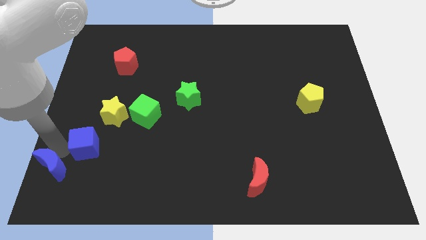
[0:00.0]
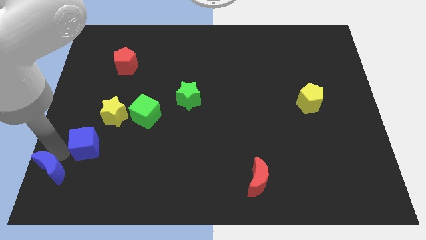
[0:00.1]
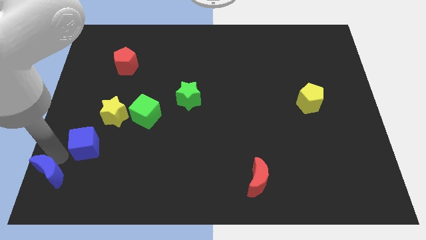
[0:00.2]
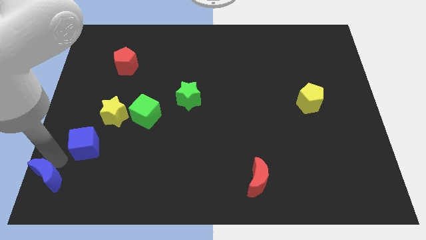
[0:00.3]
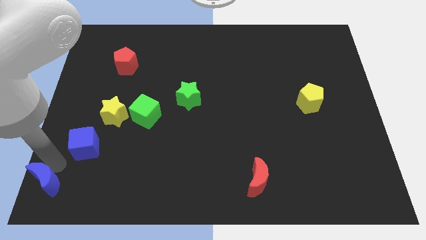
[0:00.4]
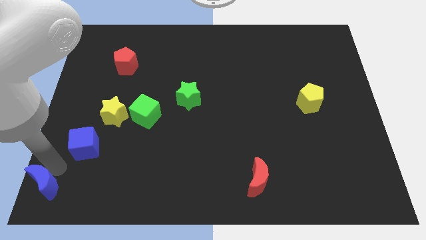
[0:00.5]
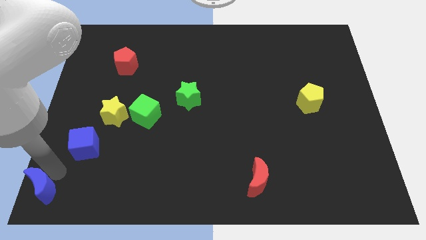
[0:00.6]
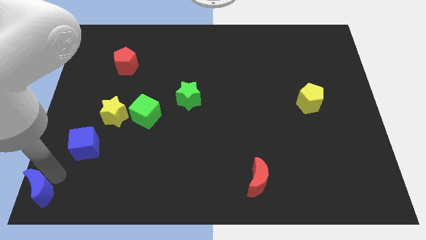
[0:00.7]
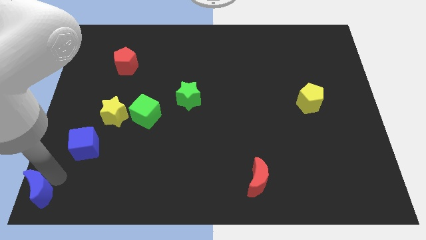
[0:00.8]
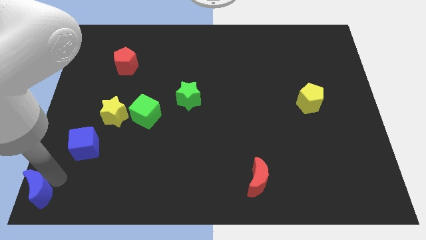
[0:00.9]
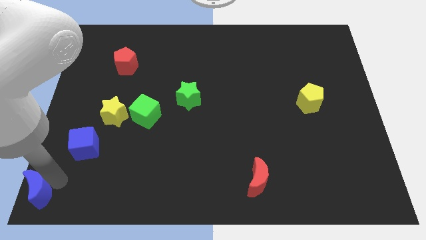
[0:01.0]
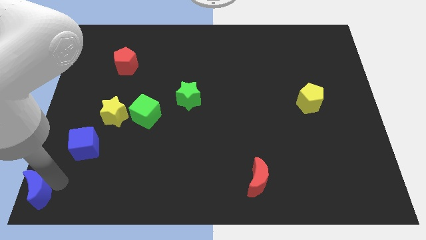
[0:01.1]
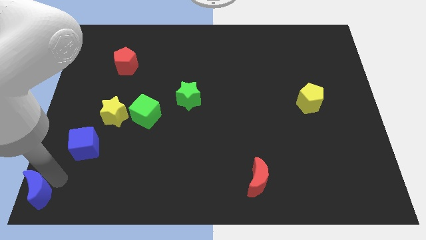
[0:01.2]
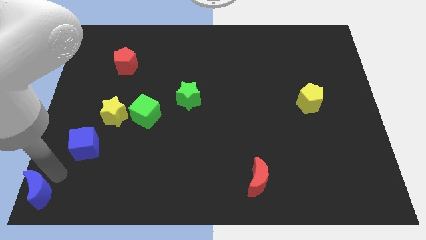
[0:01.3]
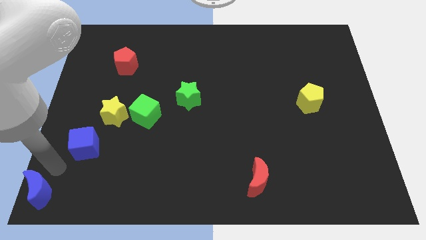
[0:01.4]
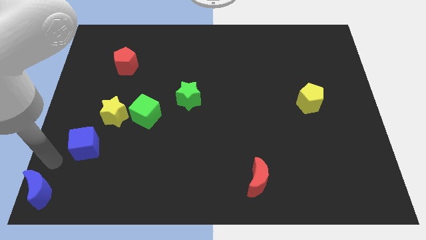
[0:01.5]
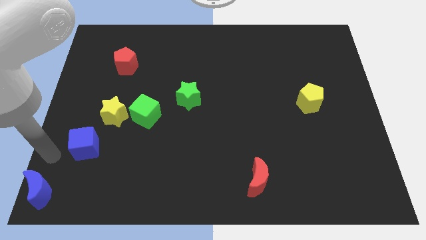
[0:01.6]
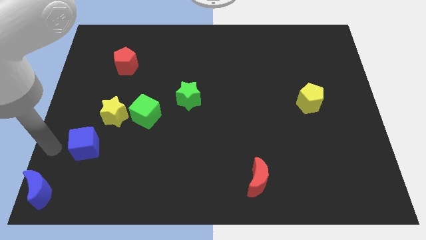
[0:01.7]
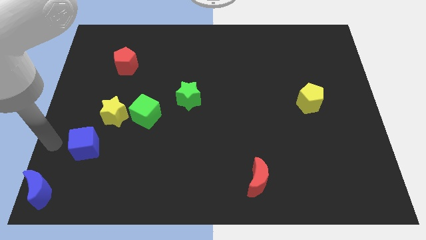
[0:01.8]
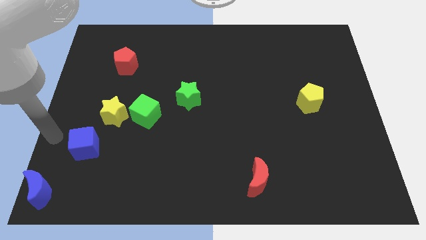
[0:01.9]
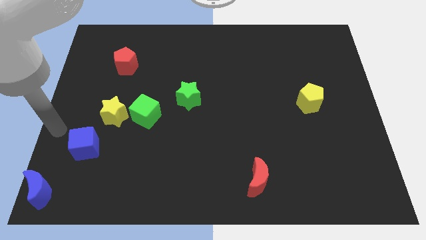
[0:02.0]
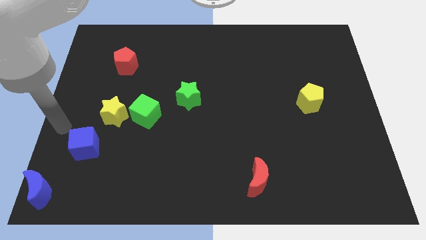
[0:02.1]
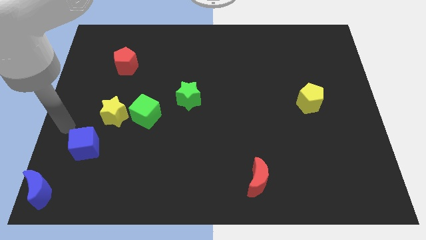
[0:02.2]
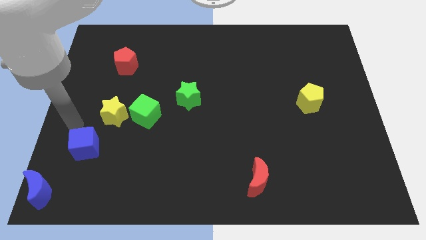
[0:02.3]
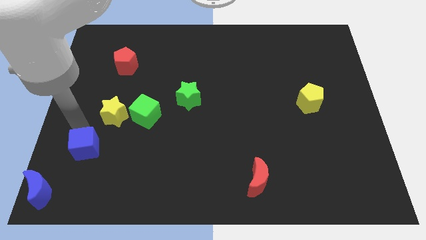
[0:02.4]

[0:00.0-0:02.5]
move the blue moon towards the bottom left of the board

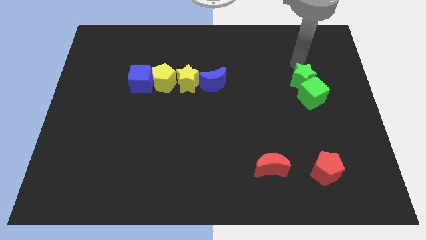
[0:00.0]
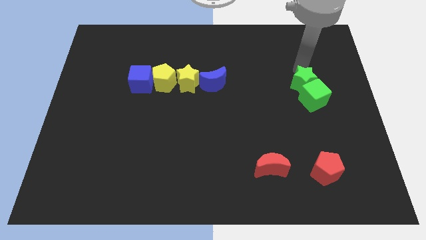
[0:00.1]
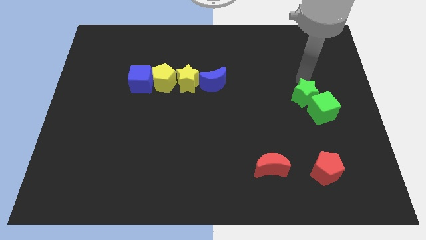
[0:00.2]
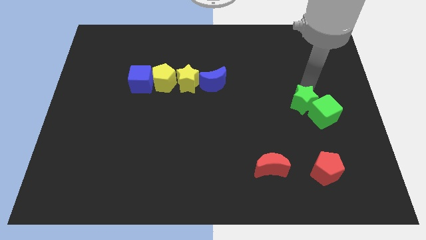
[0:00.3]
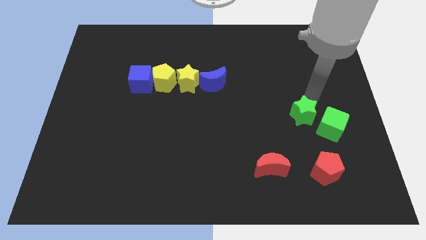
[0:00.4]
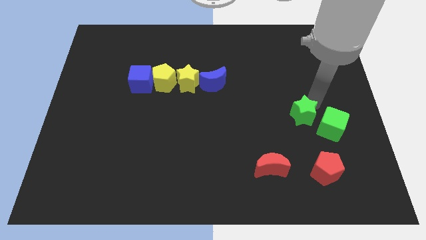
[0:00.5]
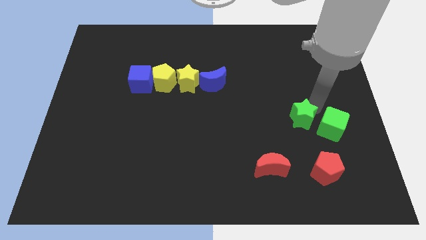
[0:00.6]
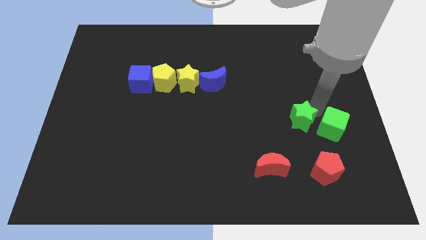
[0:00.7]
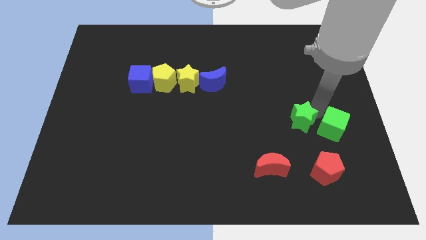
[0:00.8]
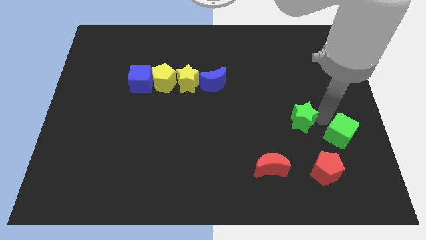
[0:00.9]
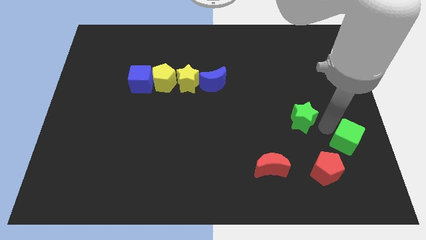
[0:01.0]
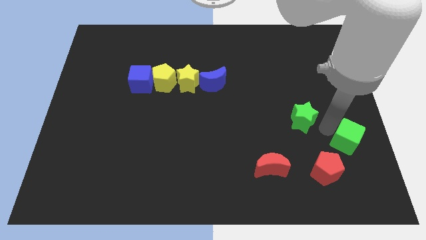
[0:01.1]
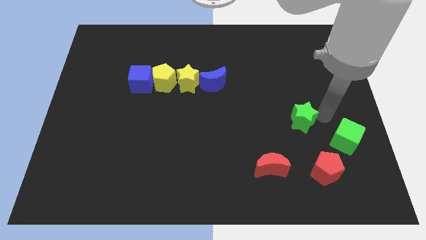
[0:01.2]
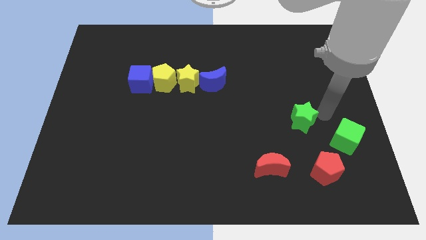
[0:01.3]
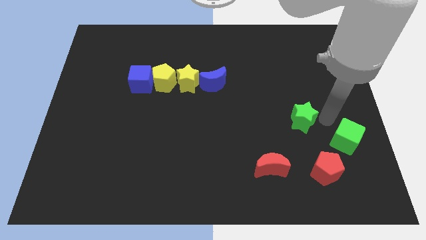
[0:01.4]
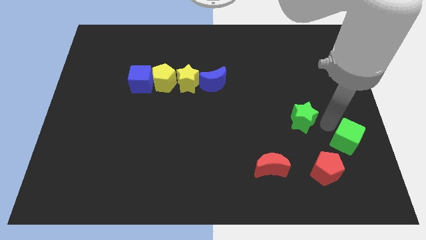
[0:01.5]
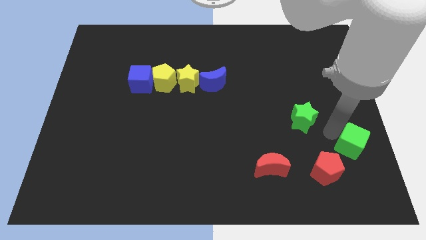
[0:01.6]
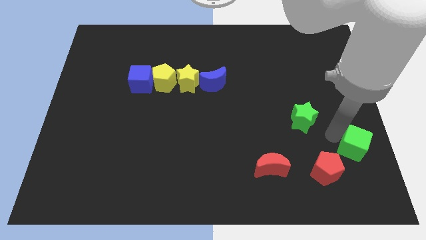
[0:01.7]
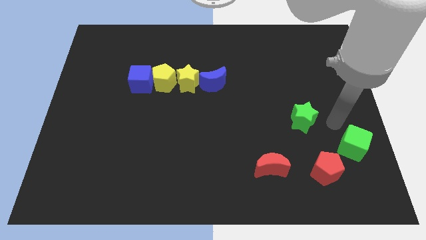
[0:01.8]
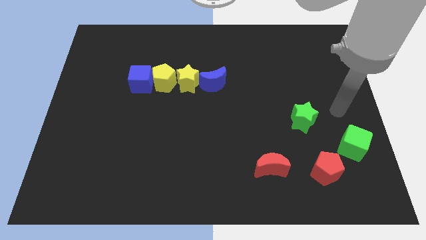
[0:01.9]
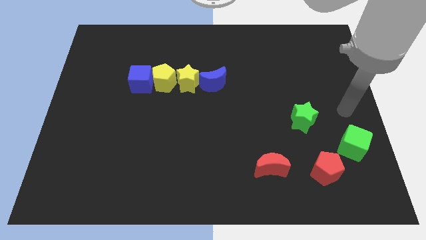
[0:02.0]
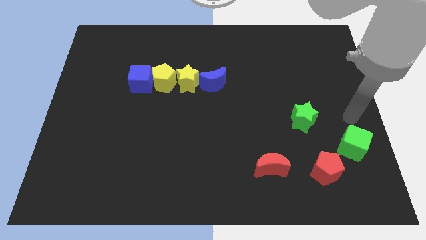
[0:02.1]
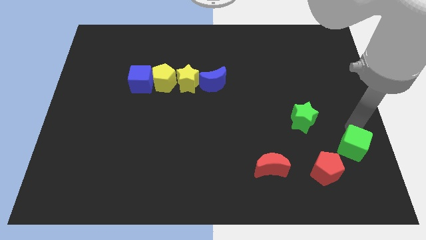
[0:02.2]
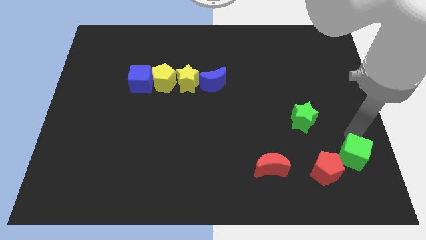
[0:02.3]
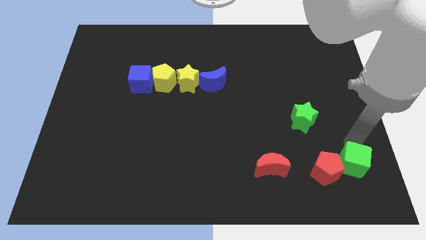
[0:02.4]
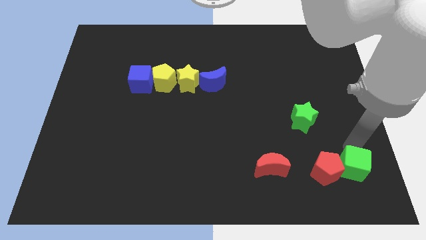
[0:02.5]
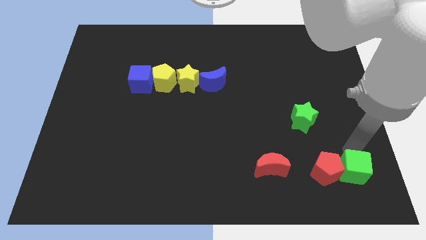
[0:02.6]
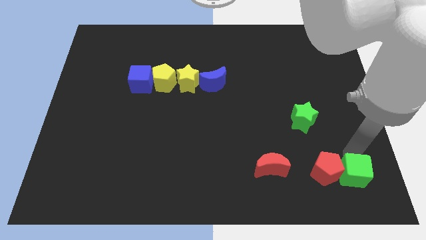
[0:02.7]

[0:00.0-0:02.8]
place the green cube right to the red pentagon

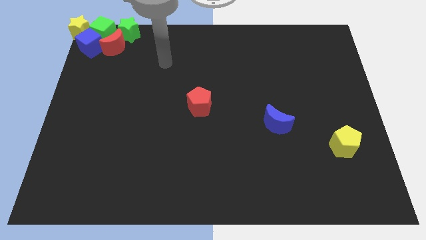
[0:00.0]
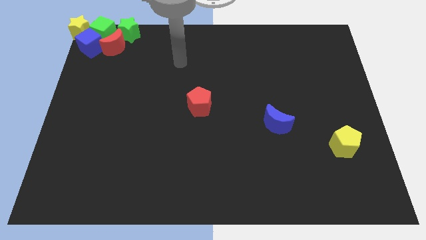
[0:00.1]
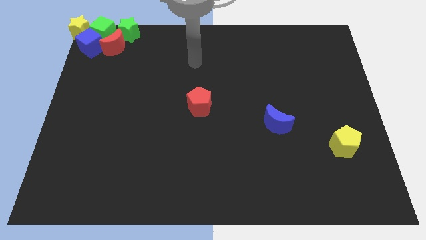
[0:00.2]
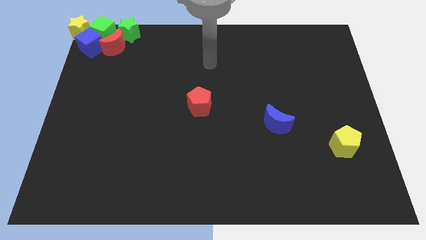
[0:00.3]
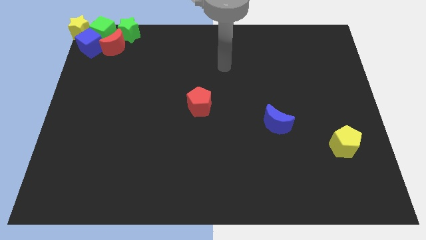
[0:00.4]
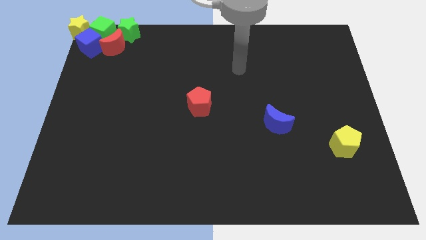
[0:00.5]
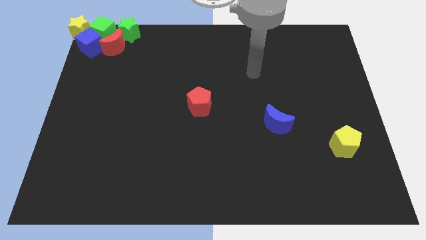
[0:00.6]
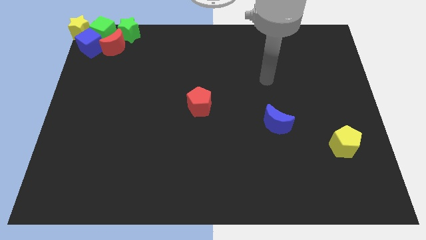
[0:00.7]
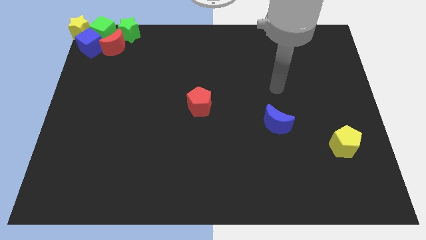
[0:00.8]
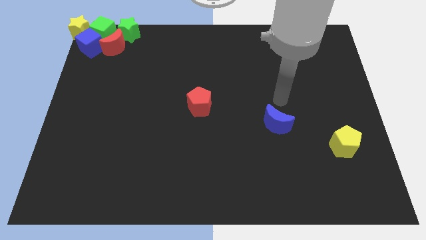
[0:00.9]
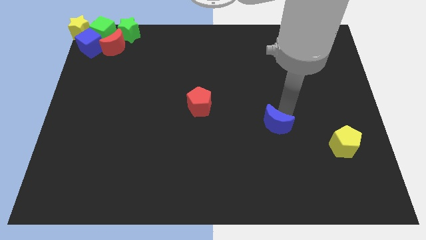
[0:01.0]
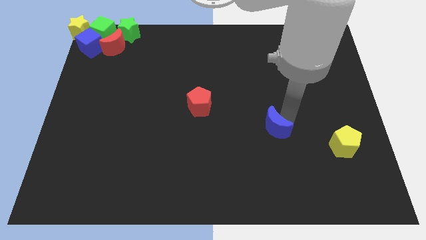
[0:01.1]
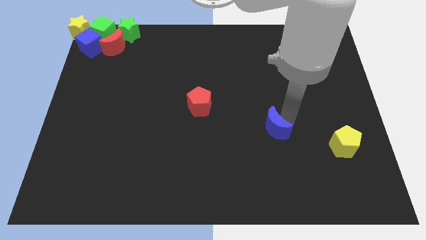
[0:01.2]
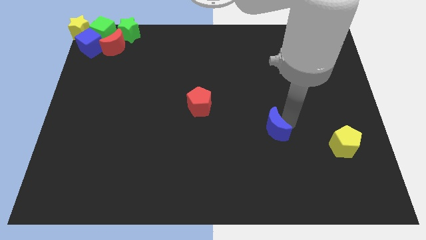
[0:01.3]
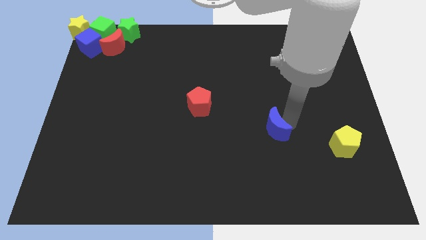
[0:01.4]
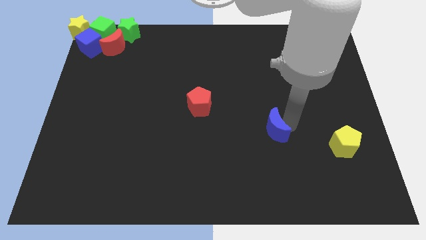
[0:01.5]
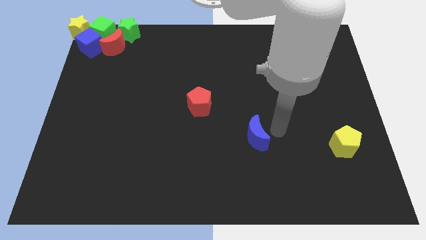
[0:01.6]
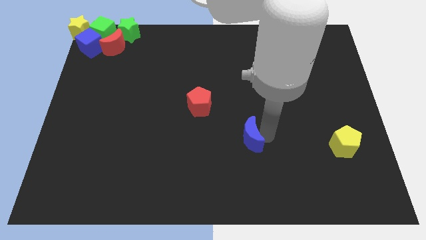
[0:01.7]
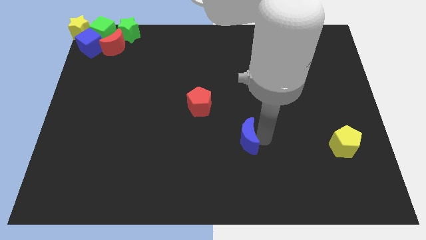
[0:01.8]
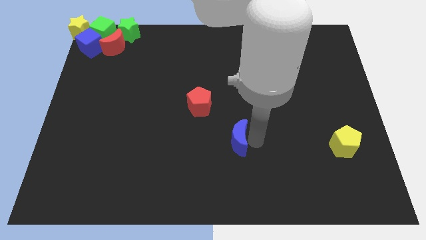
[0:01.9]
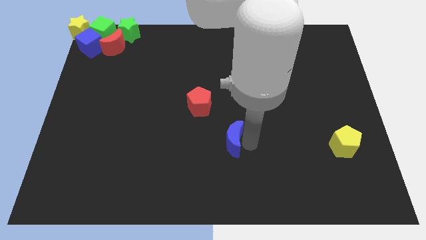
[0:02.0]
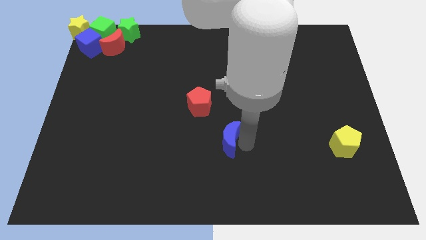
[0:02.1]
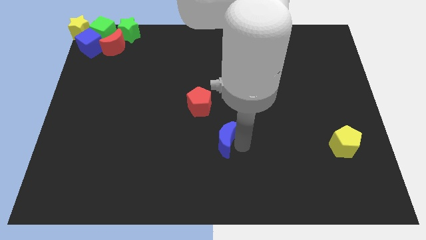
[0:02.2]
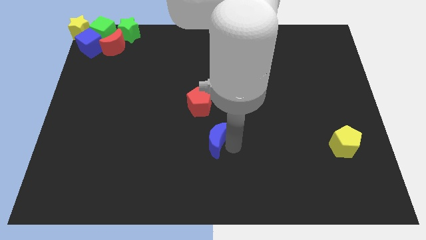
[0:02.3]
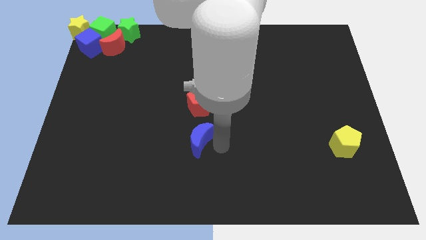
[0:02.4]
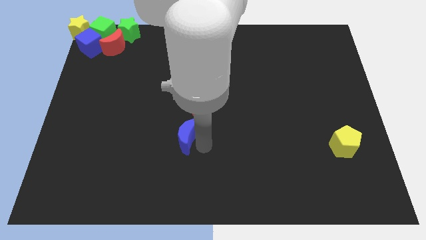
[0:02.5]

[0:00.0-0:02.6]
place the blue crescent below the red pentagon

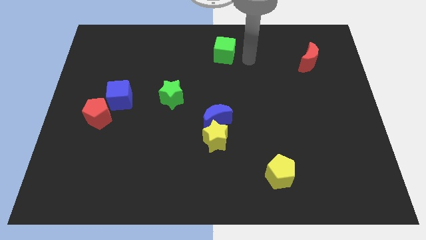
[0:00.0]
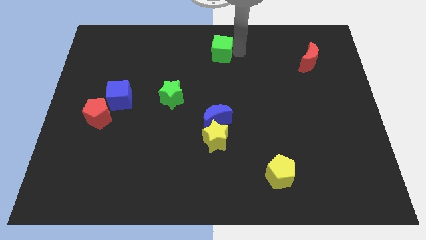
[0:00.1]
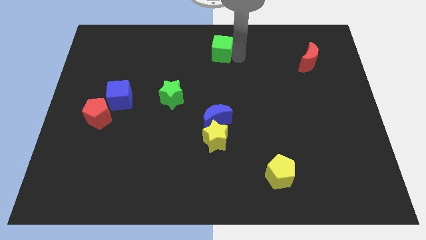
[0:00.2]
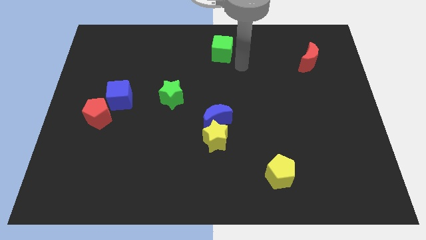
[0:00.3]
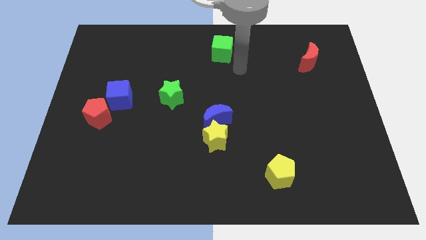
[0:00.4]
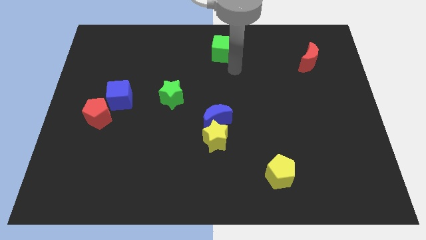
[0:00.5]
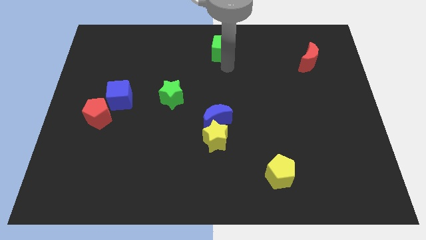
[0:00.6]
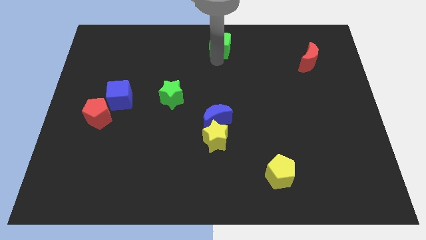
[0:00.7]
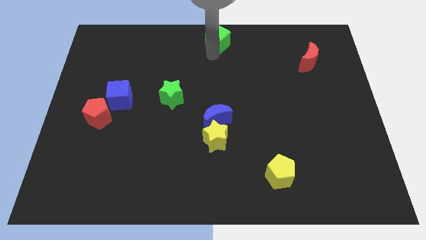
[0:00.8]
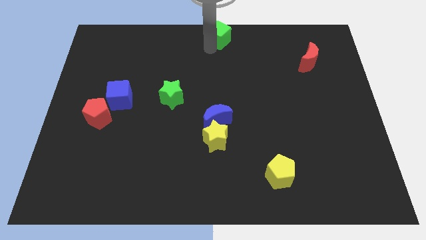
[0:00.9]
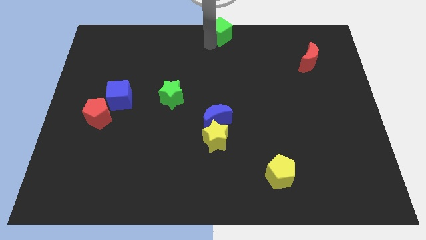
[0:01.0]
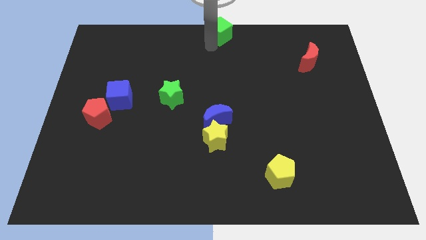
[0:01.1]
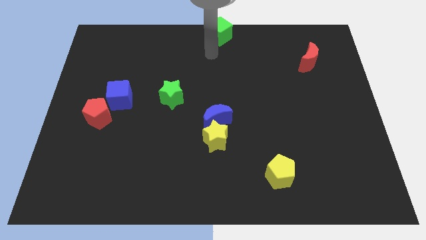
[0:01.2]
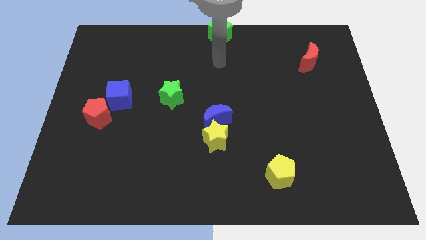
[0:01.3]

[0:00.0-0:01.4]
push the green cube to the top center of the board
